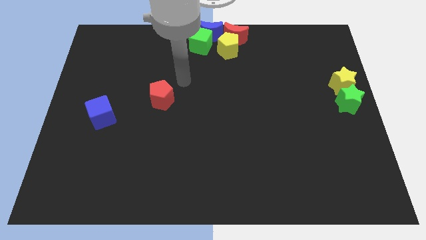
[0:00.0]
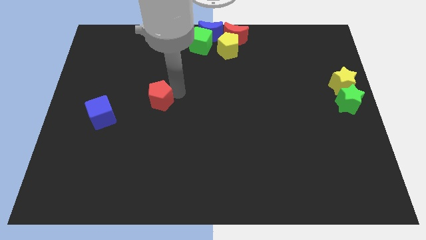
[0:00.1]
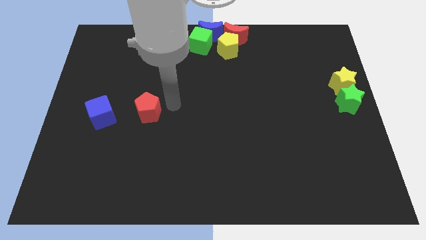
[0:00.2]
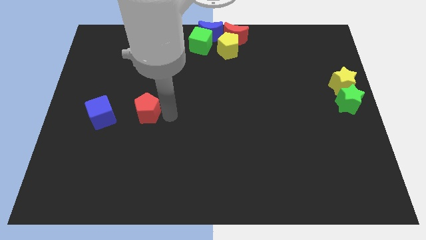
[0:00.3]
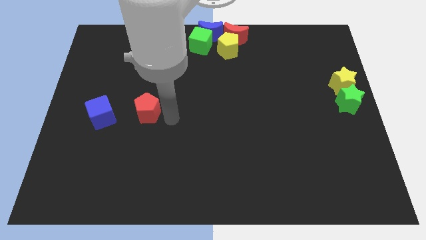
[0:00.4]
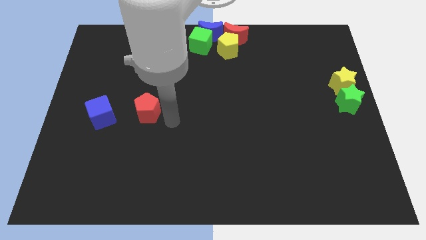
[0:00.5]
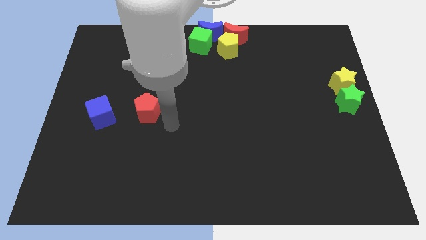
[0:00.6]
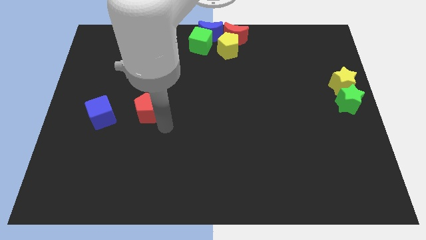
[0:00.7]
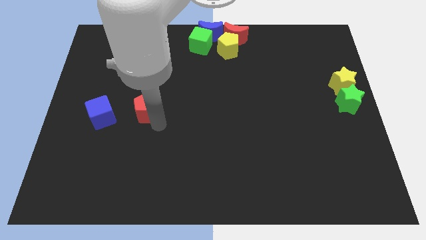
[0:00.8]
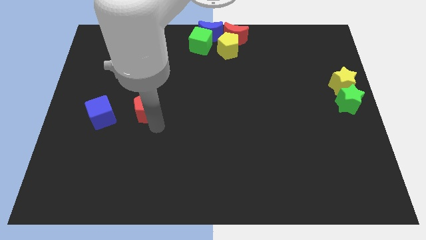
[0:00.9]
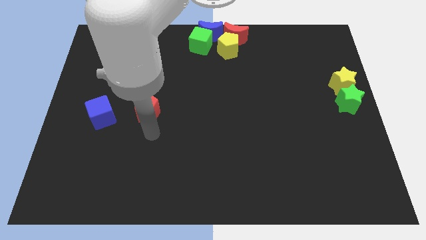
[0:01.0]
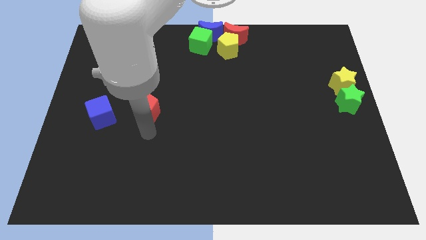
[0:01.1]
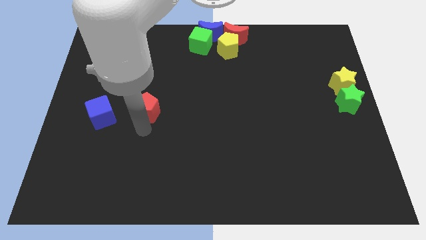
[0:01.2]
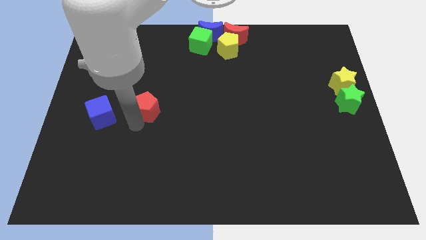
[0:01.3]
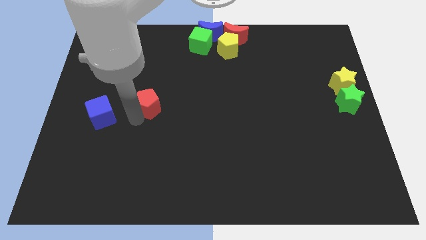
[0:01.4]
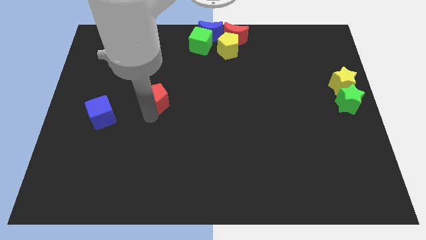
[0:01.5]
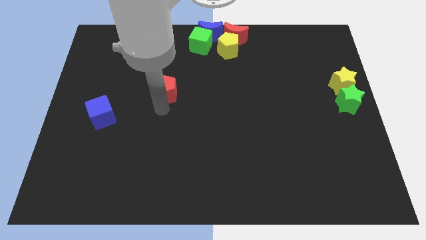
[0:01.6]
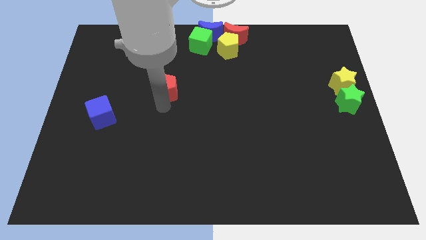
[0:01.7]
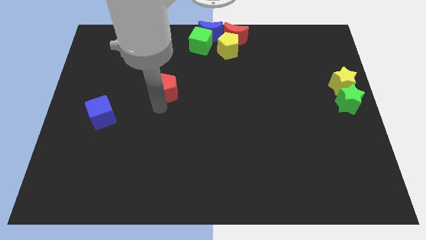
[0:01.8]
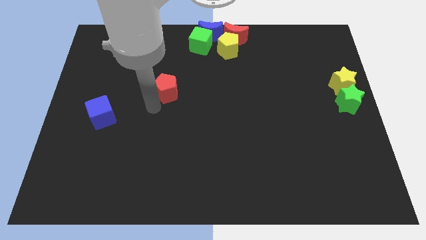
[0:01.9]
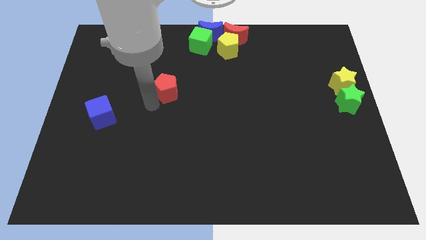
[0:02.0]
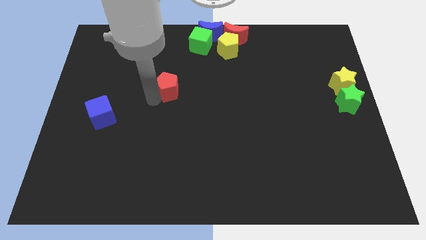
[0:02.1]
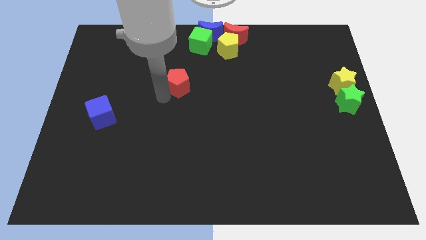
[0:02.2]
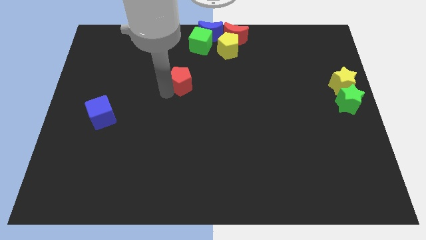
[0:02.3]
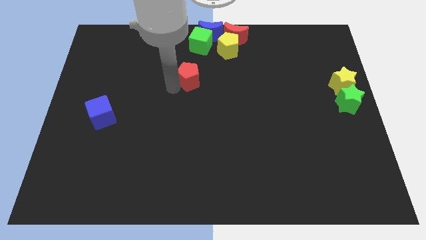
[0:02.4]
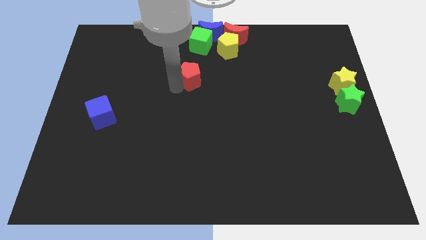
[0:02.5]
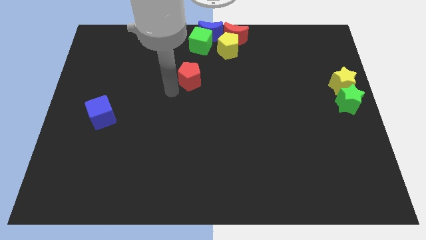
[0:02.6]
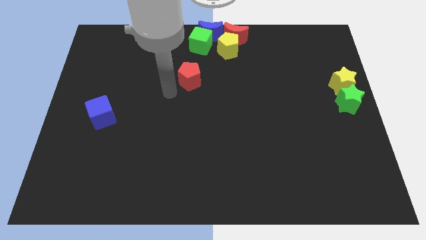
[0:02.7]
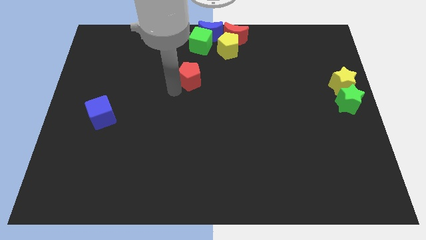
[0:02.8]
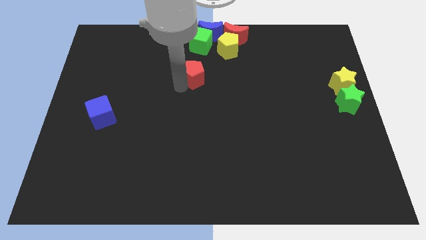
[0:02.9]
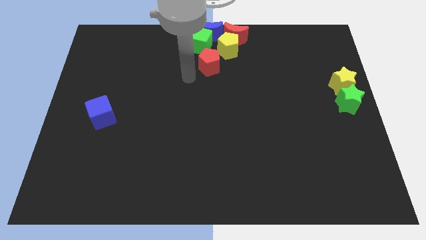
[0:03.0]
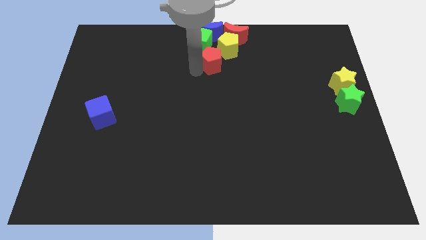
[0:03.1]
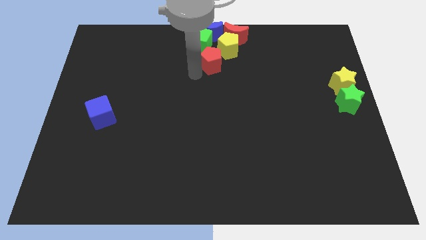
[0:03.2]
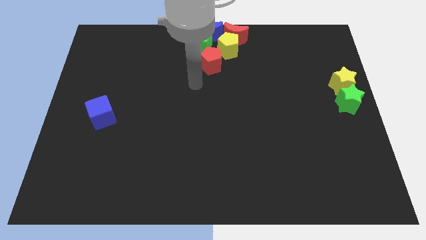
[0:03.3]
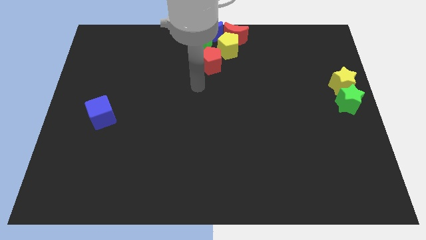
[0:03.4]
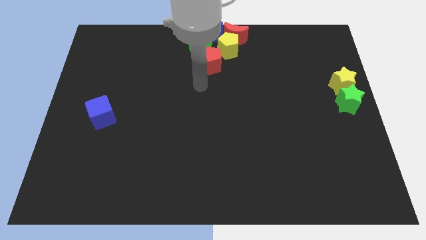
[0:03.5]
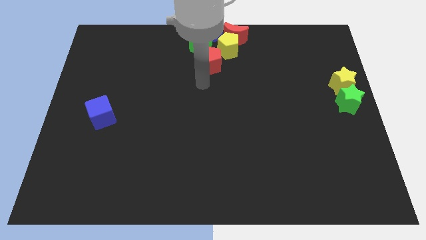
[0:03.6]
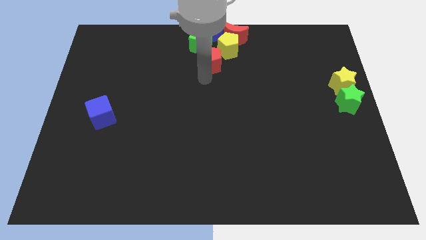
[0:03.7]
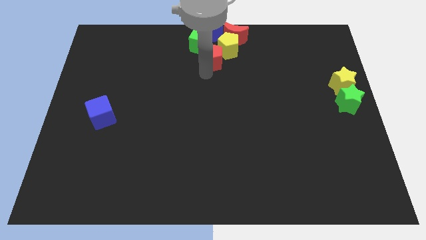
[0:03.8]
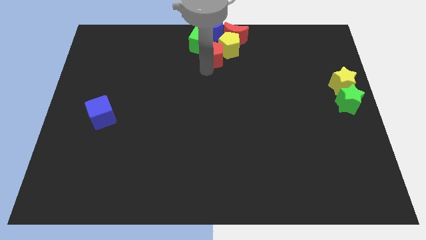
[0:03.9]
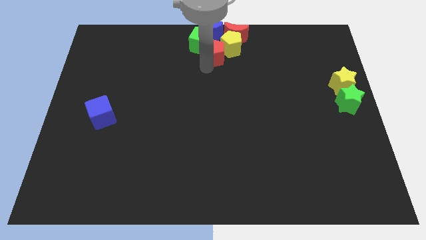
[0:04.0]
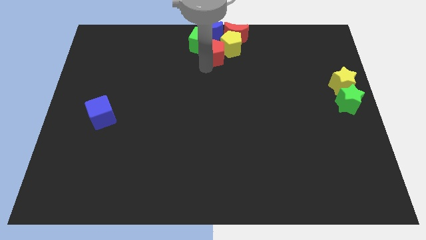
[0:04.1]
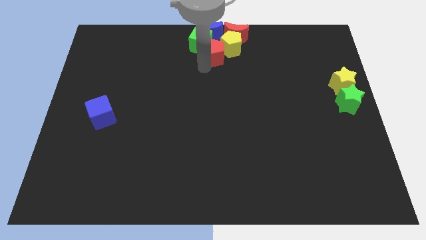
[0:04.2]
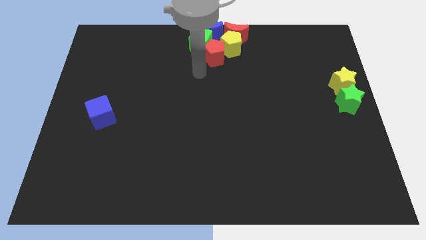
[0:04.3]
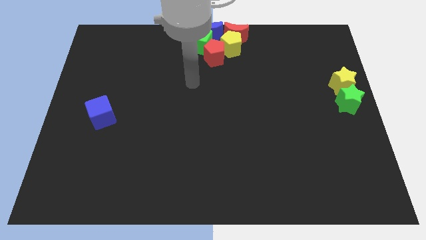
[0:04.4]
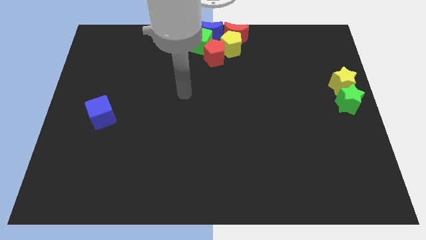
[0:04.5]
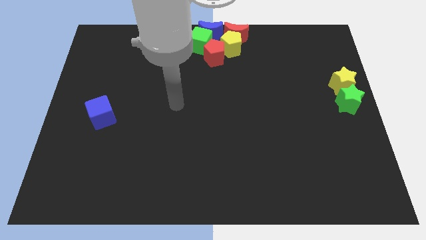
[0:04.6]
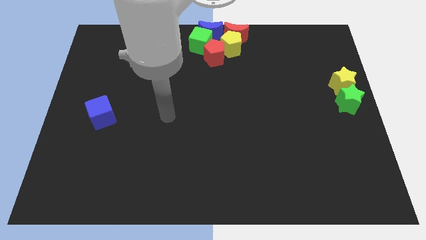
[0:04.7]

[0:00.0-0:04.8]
push the red pentagon into the yellow pentagon

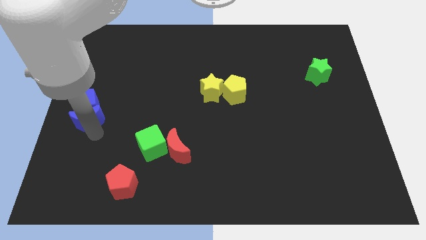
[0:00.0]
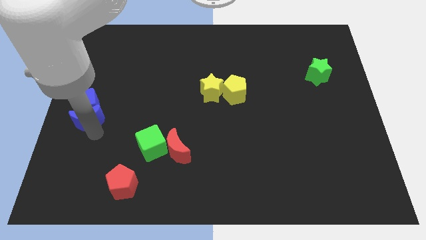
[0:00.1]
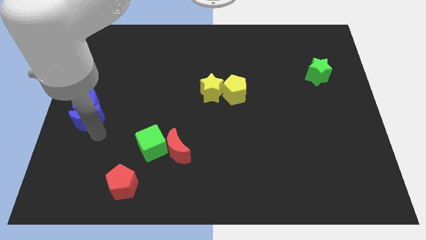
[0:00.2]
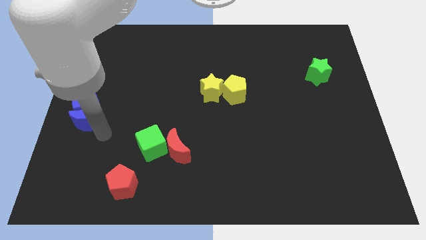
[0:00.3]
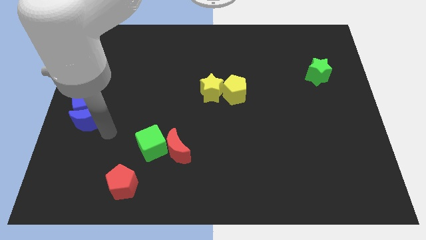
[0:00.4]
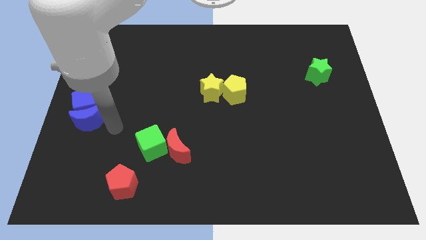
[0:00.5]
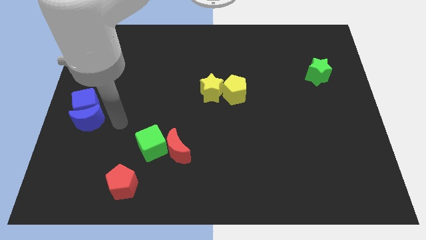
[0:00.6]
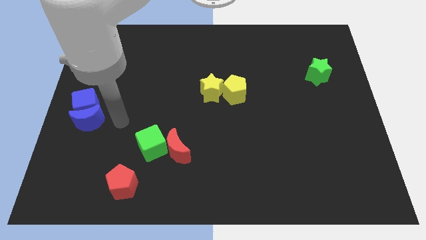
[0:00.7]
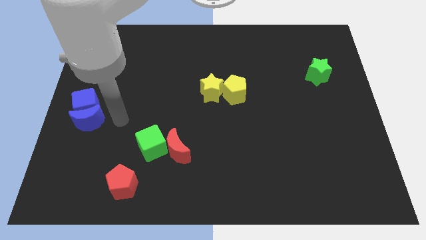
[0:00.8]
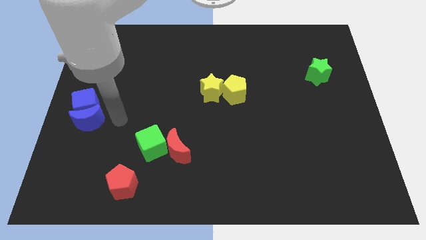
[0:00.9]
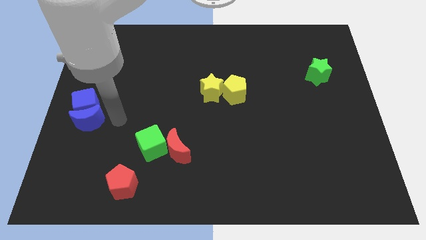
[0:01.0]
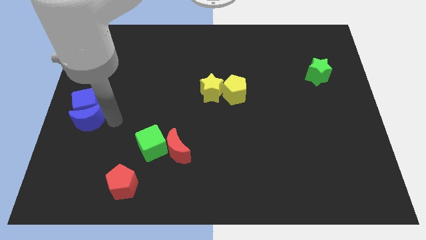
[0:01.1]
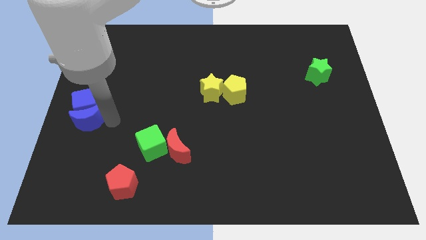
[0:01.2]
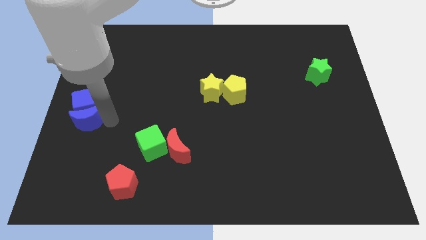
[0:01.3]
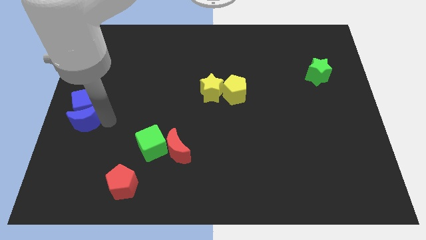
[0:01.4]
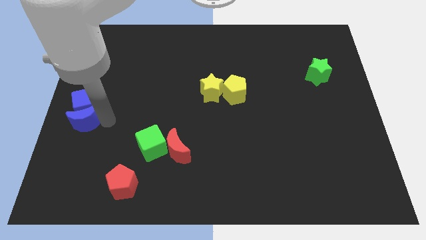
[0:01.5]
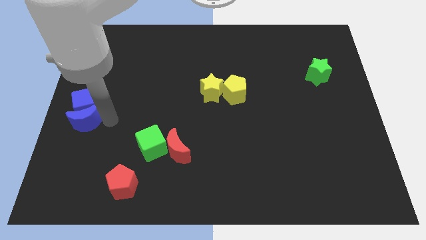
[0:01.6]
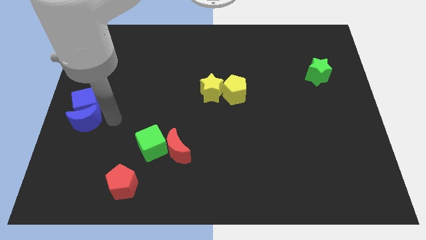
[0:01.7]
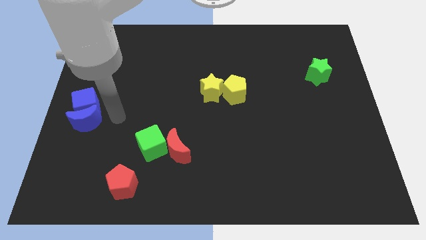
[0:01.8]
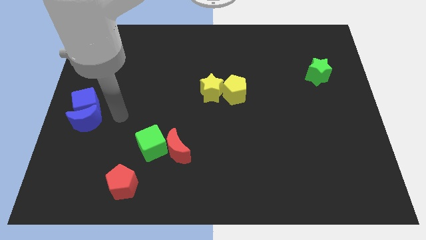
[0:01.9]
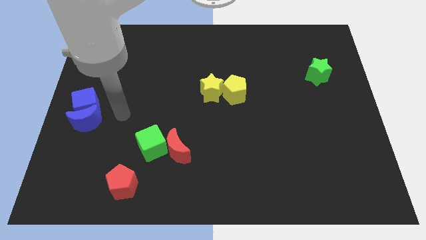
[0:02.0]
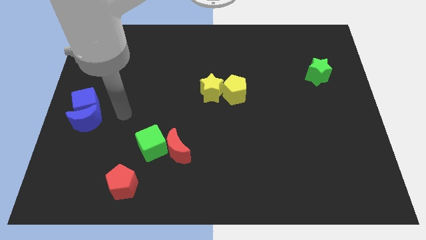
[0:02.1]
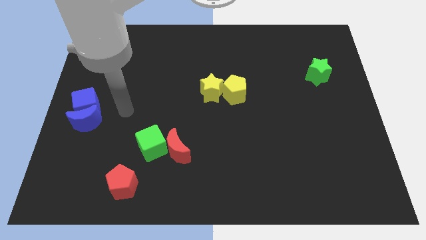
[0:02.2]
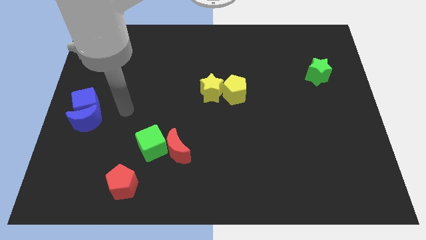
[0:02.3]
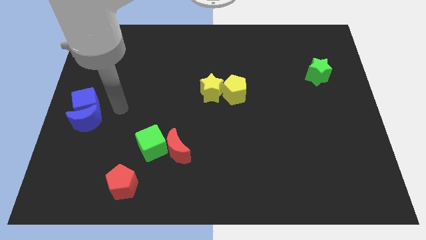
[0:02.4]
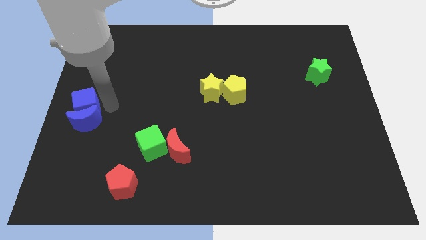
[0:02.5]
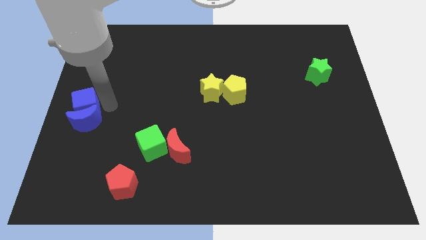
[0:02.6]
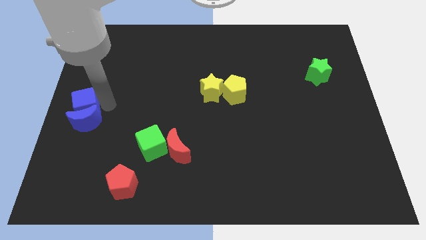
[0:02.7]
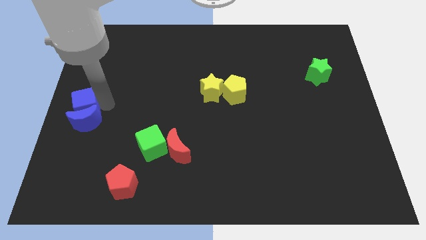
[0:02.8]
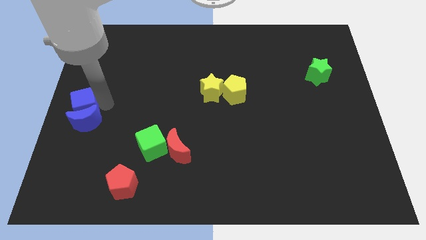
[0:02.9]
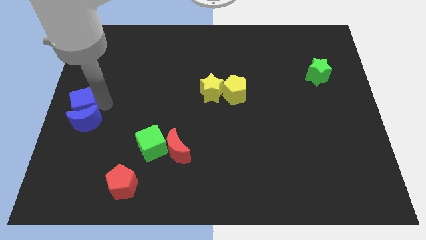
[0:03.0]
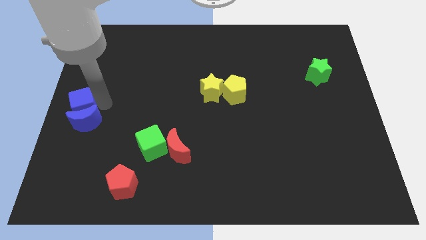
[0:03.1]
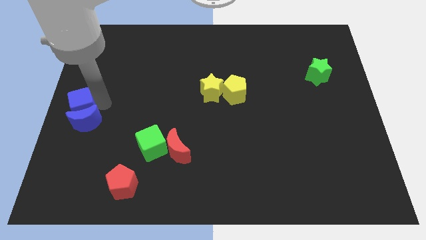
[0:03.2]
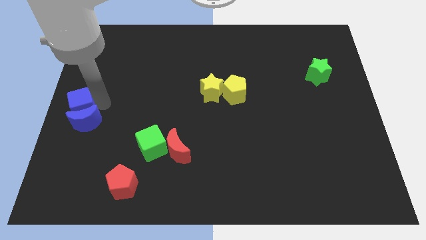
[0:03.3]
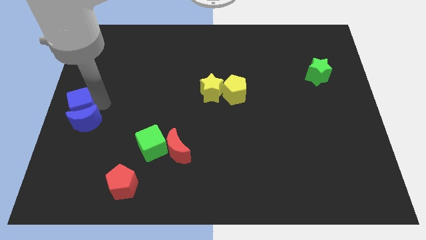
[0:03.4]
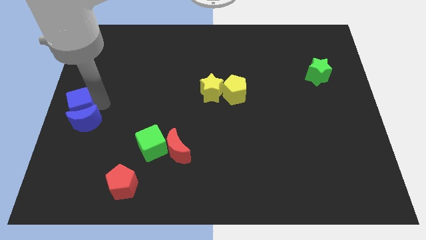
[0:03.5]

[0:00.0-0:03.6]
slightly push the blue crescent with blue cube upwards

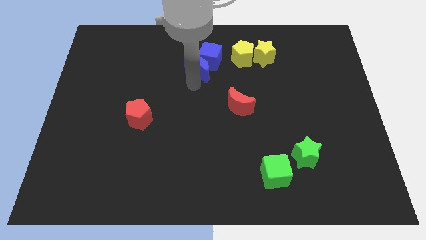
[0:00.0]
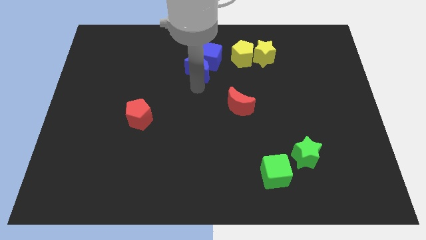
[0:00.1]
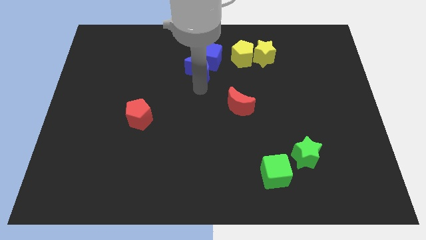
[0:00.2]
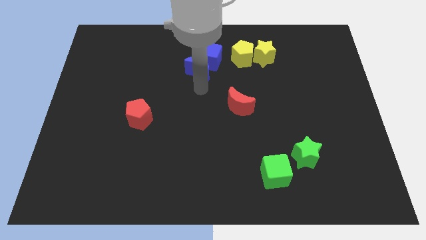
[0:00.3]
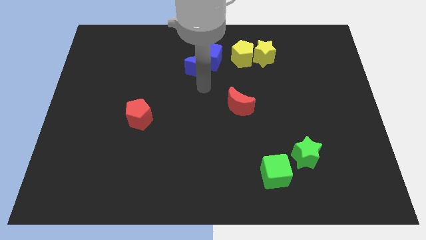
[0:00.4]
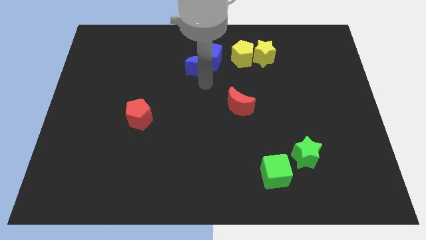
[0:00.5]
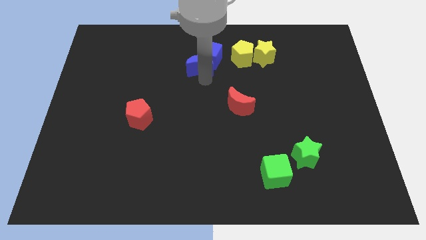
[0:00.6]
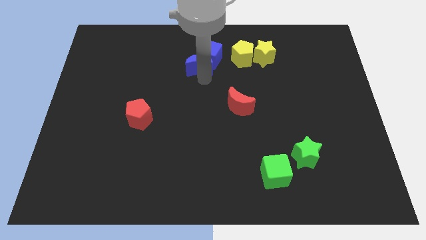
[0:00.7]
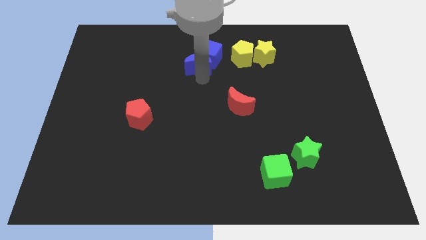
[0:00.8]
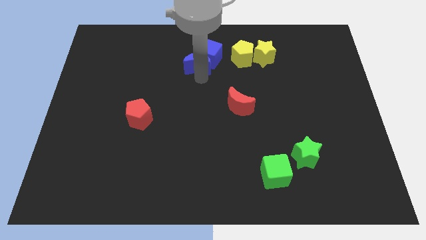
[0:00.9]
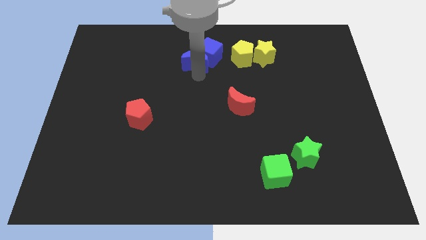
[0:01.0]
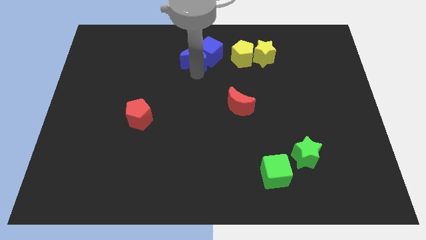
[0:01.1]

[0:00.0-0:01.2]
push the blue crescent into the blue cube
